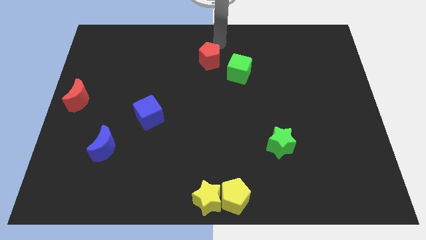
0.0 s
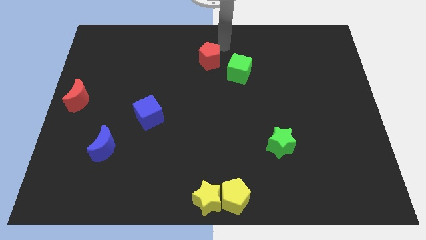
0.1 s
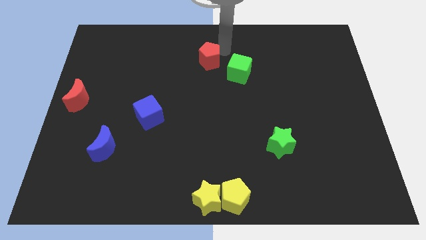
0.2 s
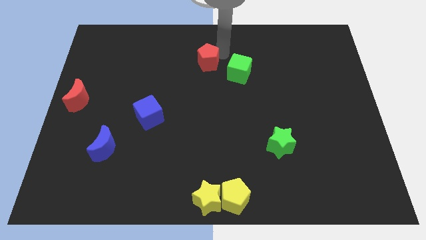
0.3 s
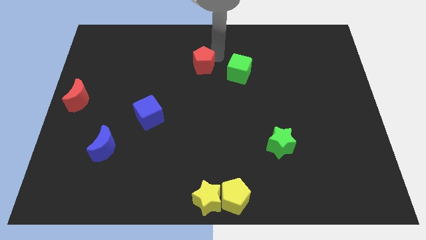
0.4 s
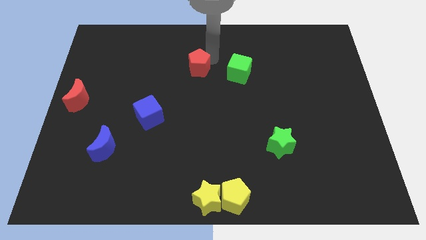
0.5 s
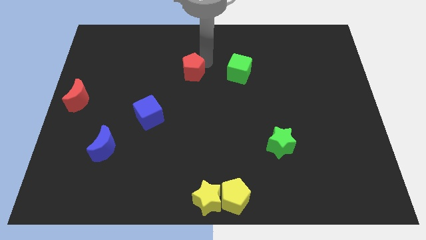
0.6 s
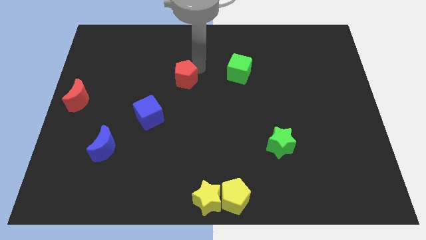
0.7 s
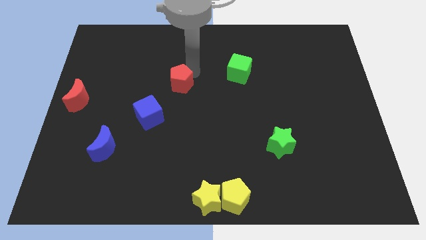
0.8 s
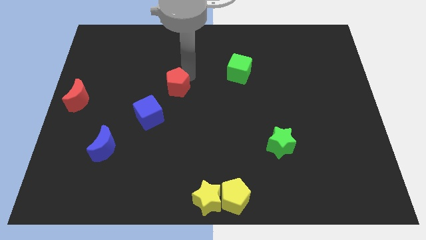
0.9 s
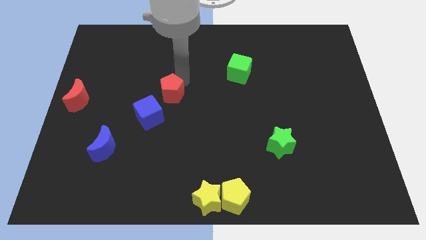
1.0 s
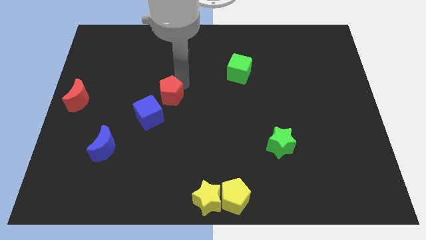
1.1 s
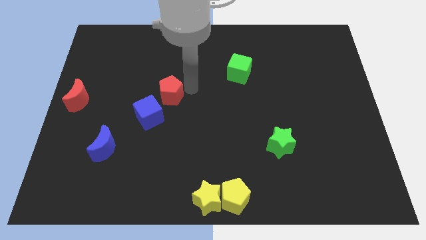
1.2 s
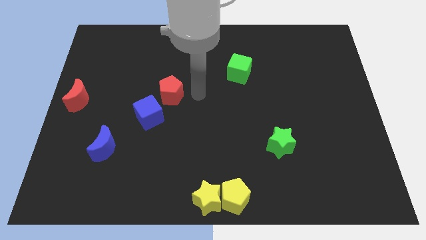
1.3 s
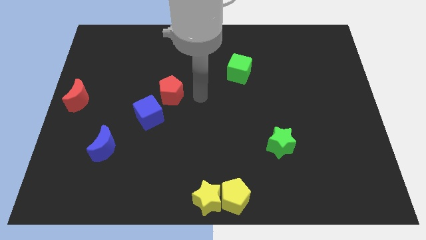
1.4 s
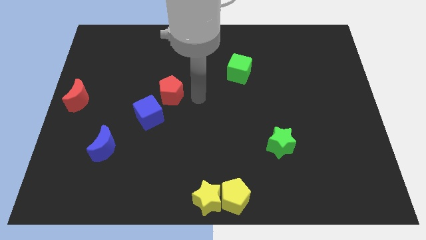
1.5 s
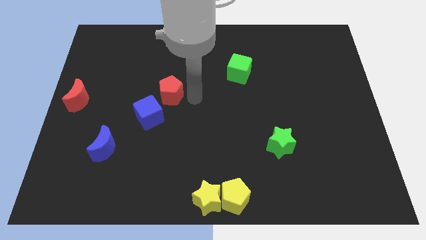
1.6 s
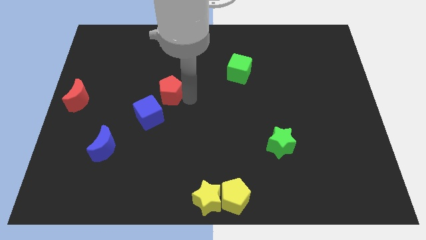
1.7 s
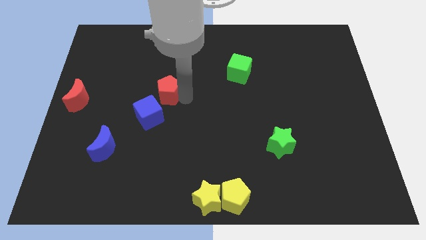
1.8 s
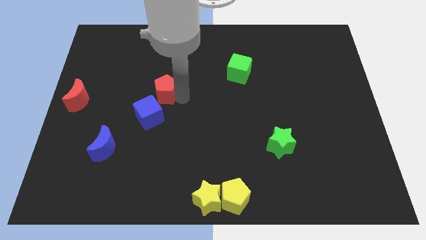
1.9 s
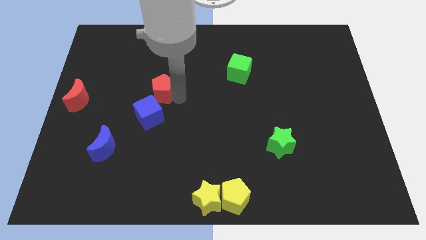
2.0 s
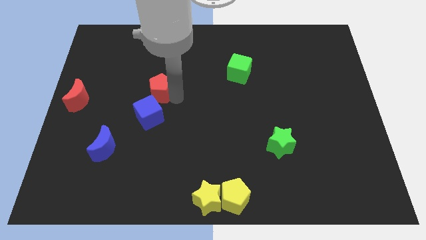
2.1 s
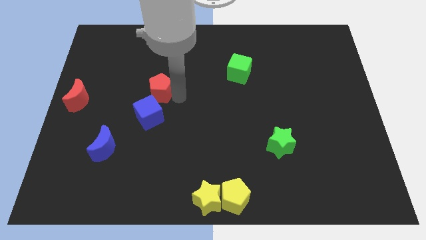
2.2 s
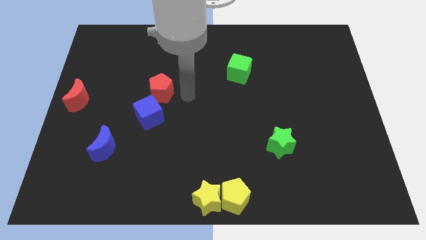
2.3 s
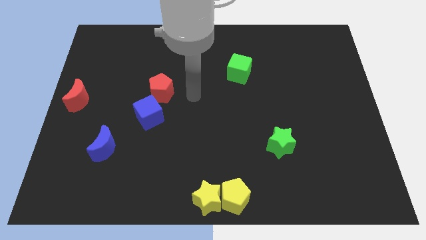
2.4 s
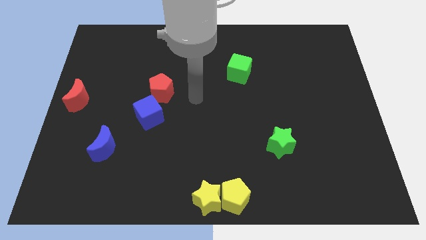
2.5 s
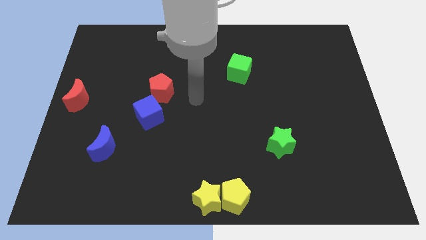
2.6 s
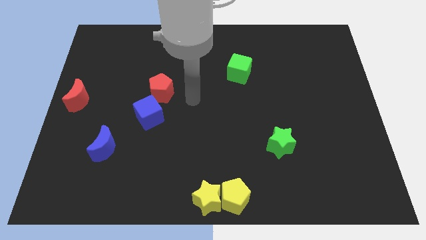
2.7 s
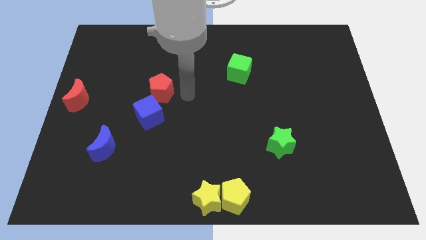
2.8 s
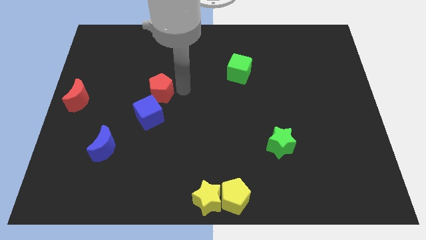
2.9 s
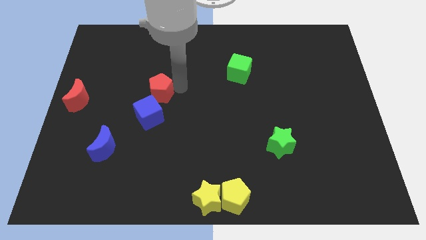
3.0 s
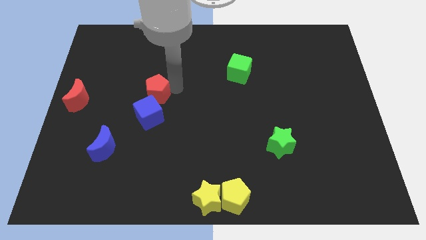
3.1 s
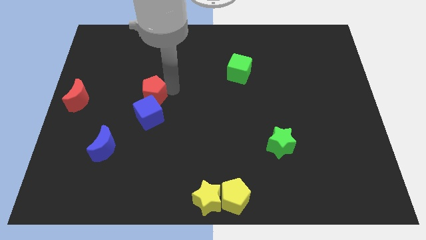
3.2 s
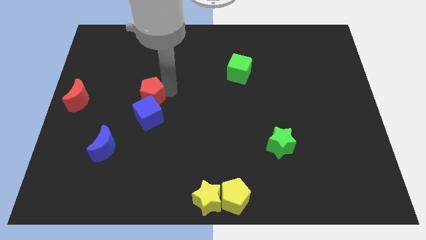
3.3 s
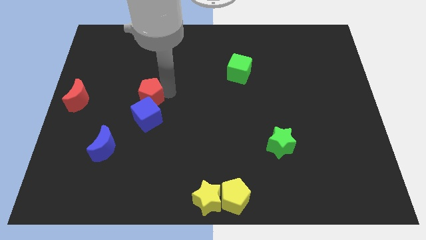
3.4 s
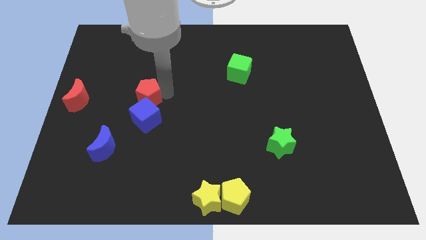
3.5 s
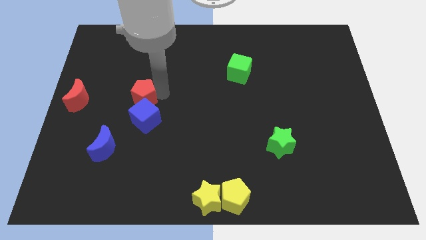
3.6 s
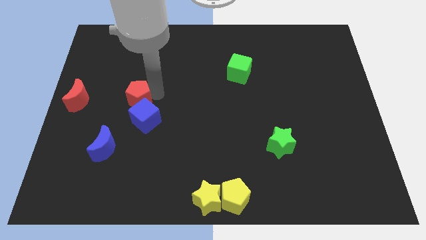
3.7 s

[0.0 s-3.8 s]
slide the red pentagon to the top side of the blue cube

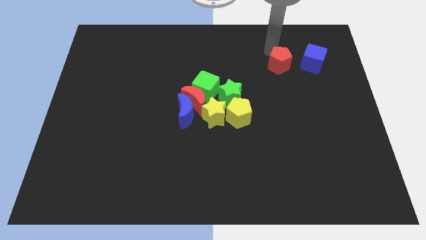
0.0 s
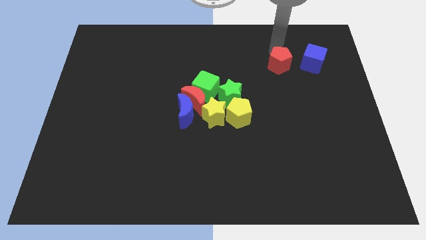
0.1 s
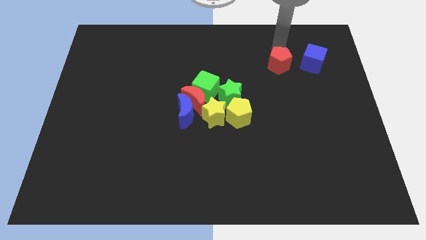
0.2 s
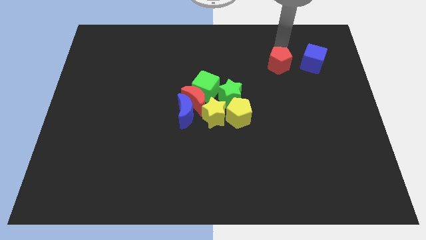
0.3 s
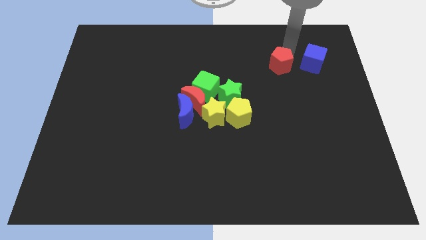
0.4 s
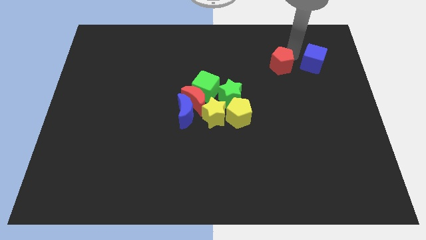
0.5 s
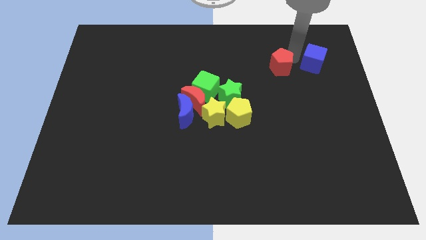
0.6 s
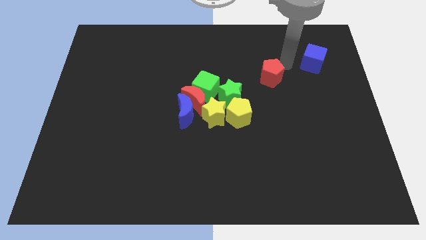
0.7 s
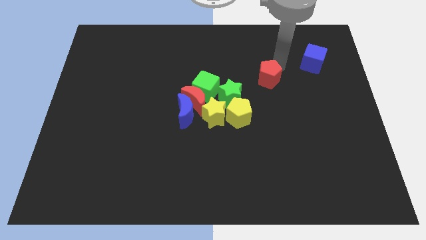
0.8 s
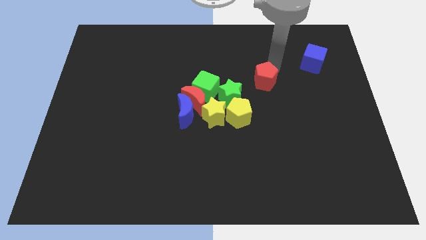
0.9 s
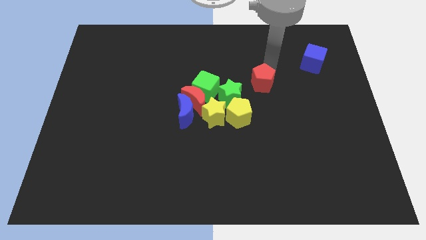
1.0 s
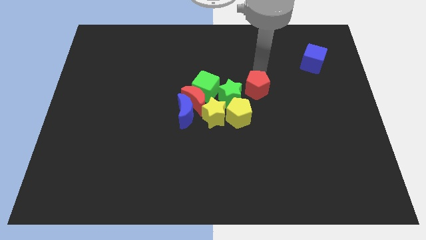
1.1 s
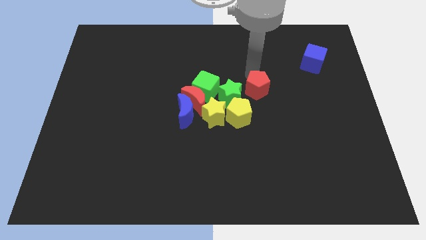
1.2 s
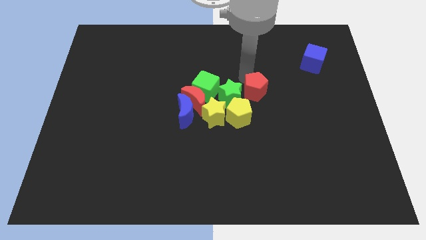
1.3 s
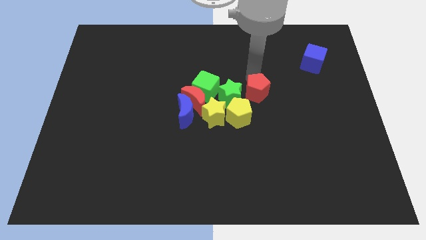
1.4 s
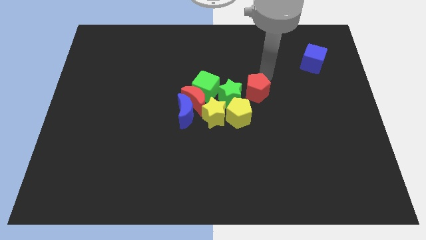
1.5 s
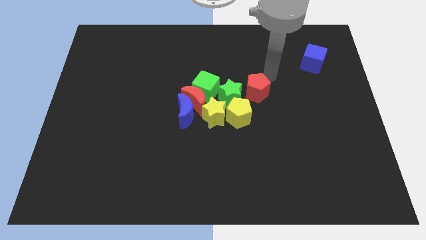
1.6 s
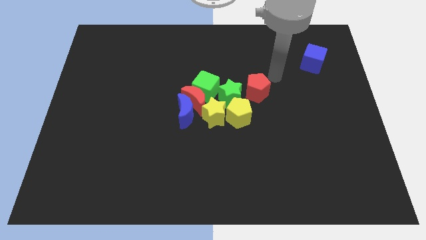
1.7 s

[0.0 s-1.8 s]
take the red pentagon near to the green star

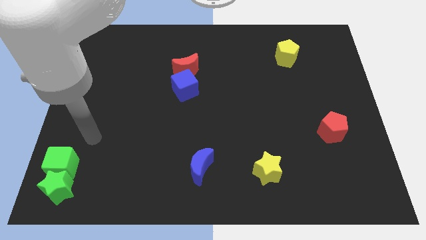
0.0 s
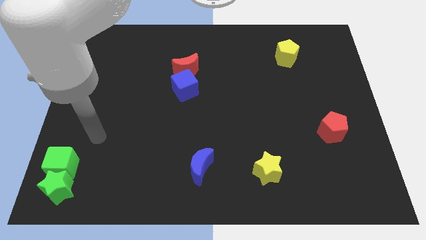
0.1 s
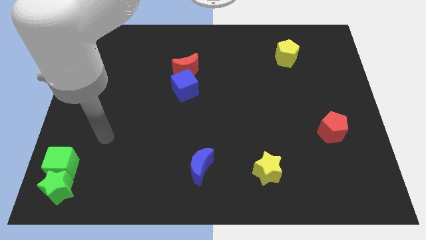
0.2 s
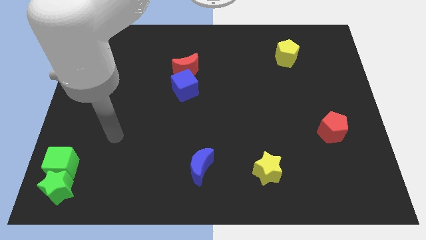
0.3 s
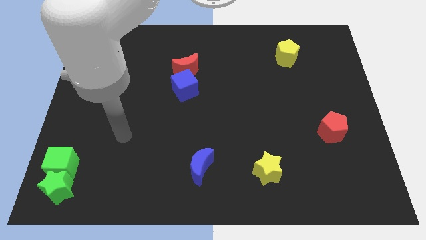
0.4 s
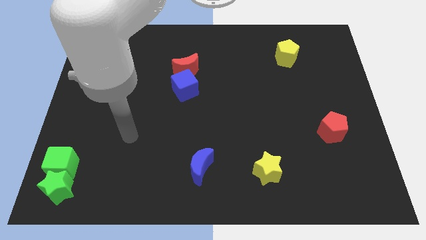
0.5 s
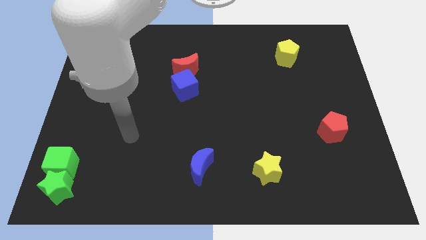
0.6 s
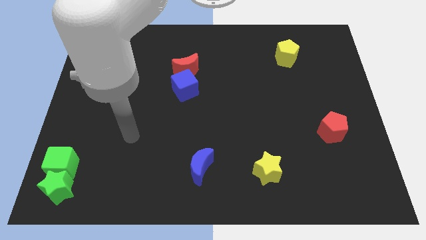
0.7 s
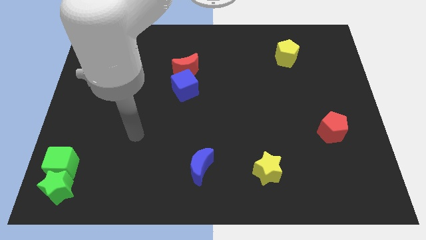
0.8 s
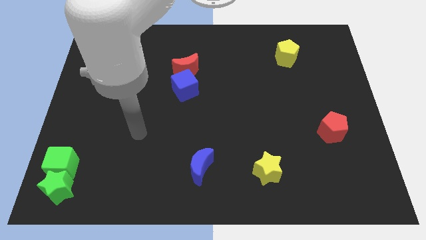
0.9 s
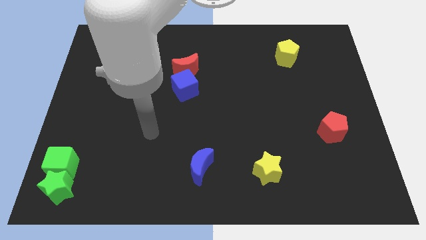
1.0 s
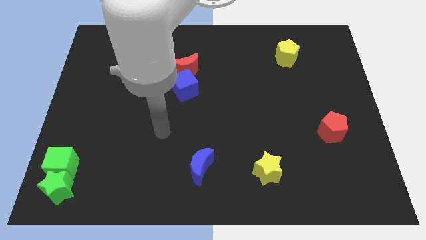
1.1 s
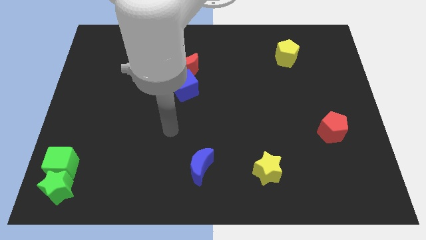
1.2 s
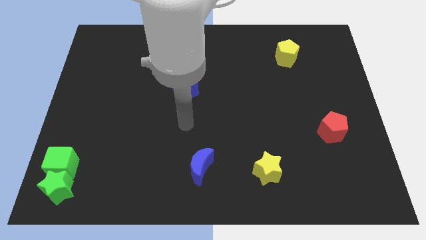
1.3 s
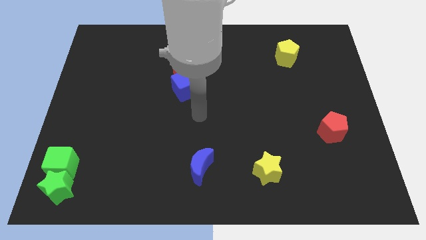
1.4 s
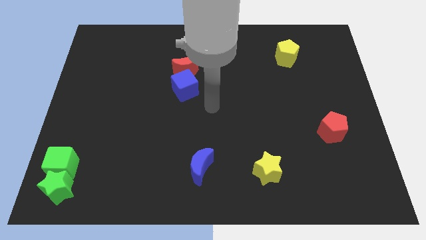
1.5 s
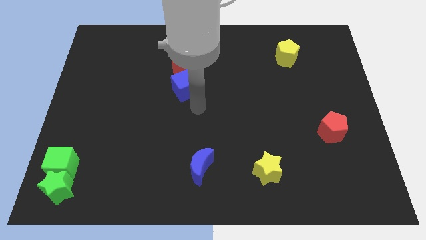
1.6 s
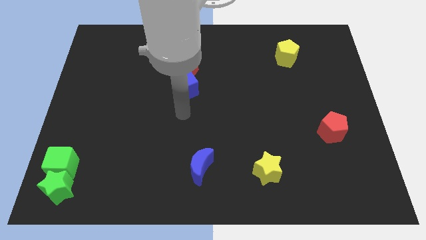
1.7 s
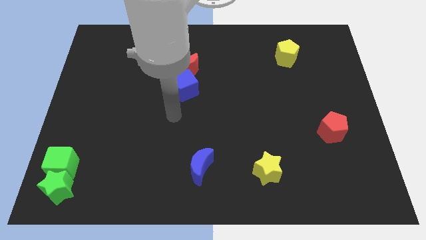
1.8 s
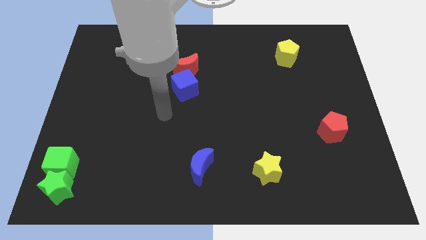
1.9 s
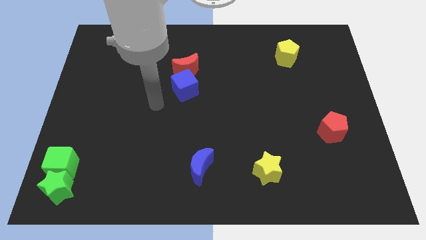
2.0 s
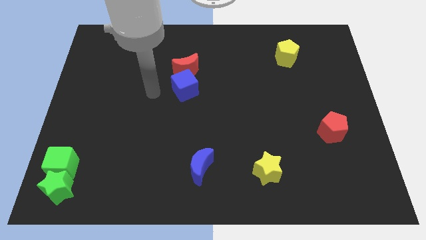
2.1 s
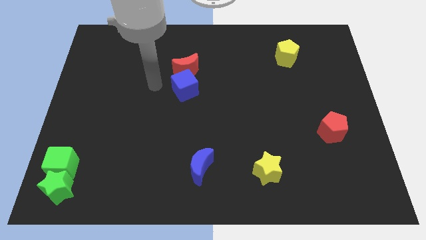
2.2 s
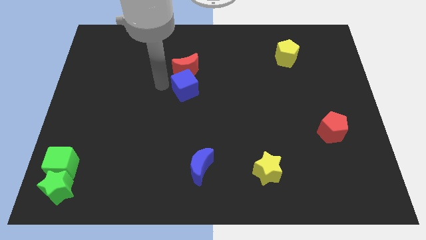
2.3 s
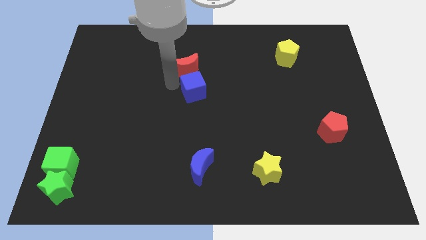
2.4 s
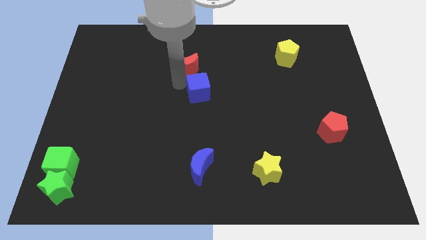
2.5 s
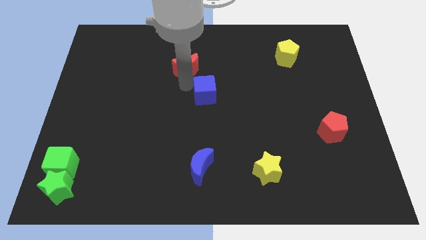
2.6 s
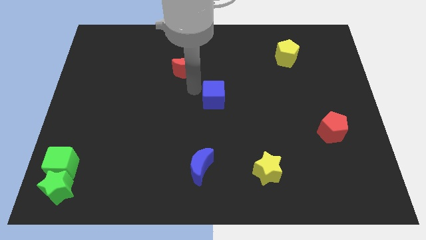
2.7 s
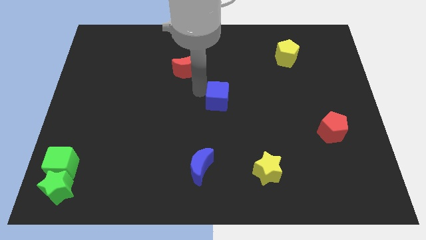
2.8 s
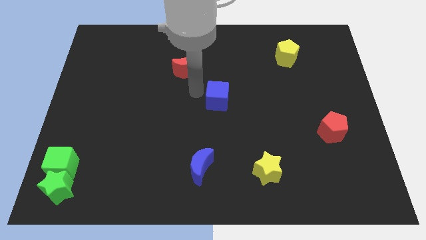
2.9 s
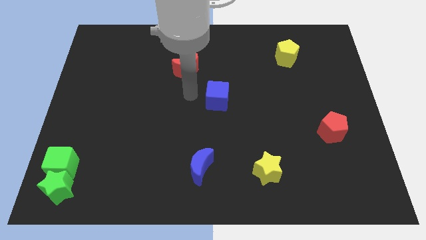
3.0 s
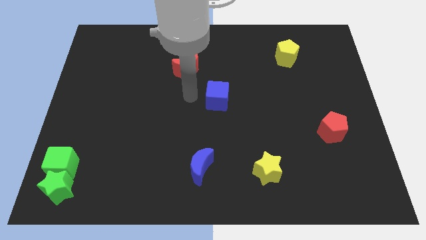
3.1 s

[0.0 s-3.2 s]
separate the blue cube from the red moon

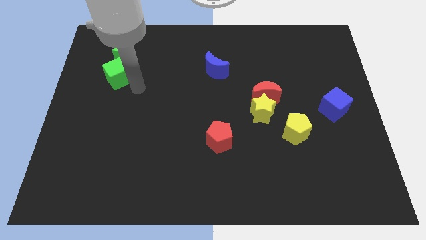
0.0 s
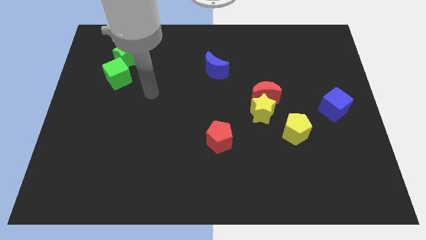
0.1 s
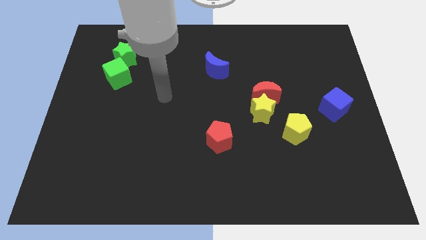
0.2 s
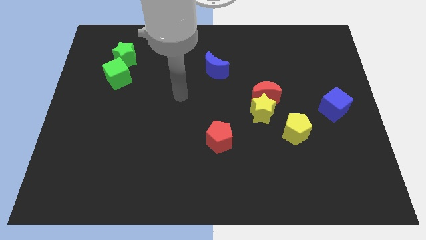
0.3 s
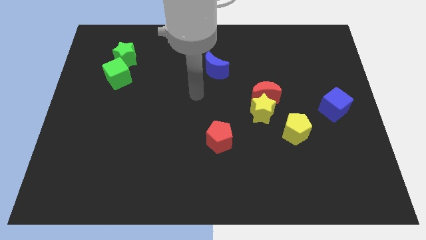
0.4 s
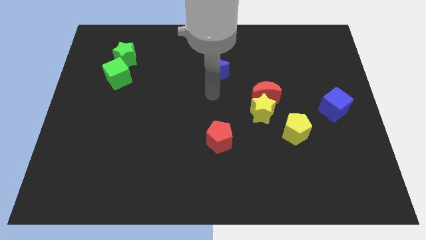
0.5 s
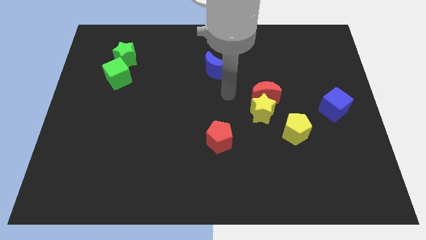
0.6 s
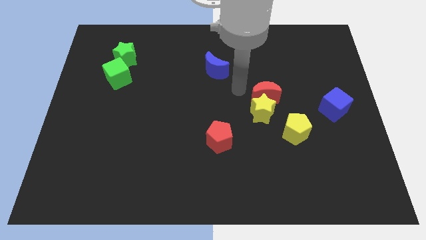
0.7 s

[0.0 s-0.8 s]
move your arm away from the green cube
